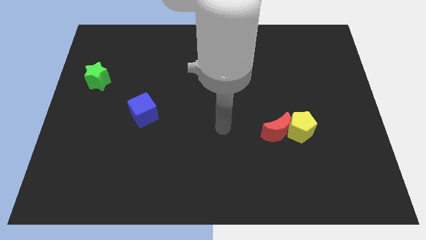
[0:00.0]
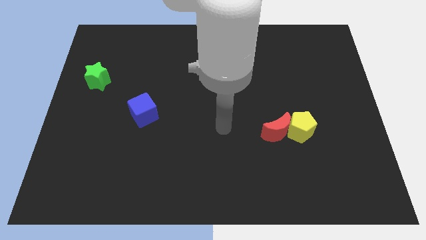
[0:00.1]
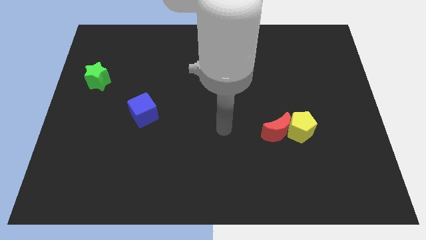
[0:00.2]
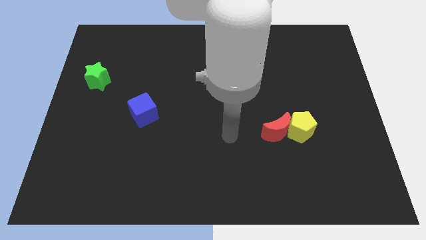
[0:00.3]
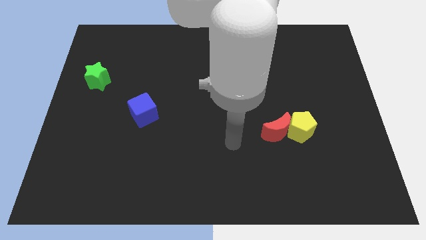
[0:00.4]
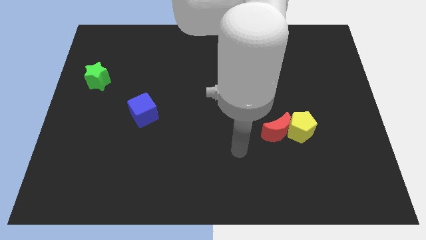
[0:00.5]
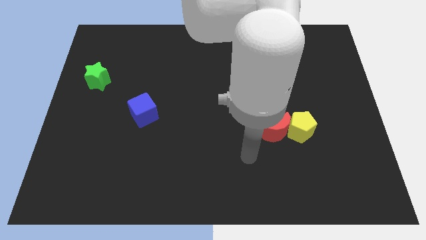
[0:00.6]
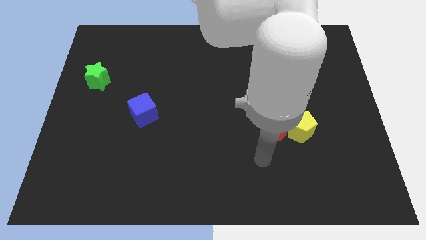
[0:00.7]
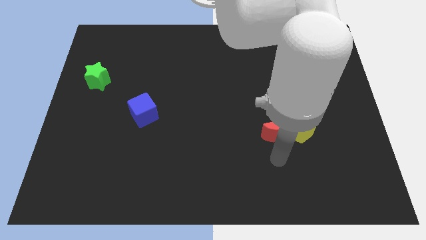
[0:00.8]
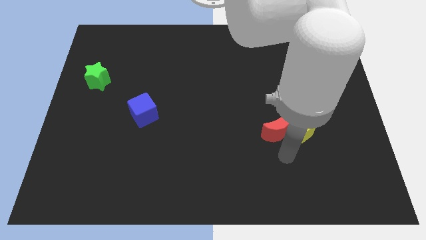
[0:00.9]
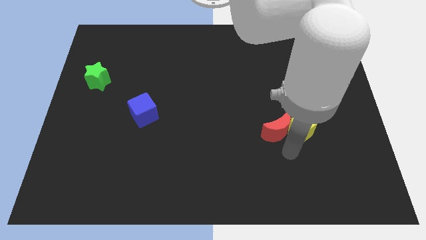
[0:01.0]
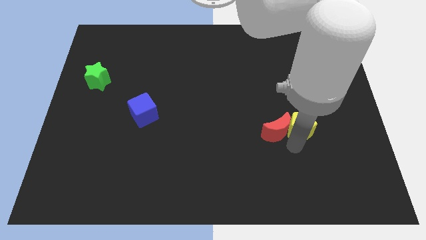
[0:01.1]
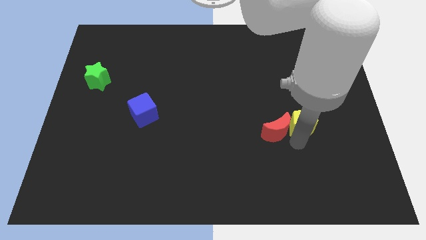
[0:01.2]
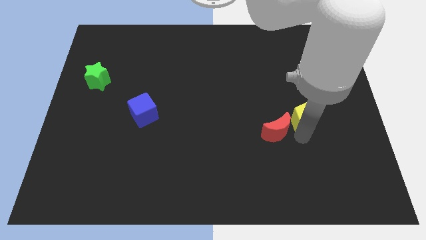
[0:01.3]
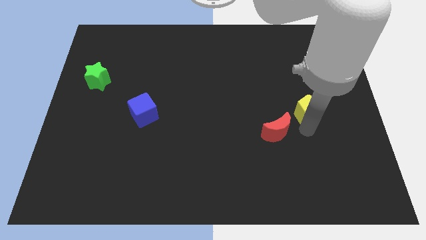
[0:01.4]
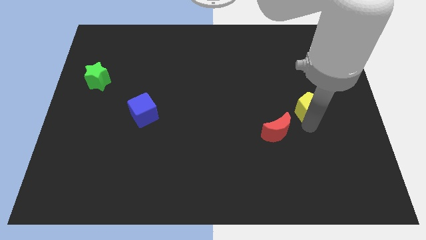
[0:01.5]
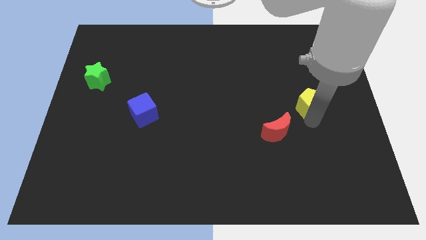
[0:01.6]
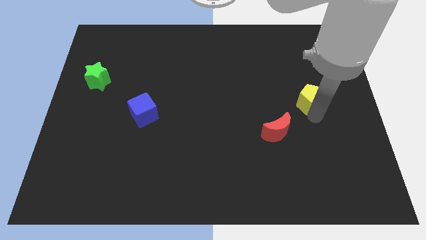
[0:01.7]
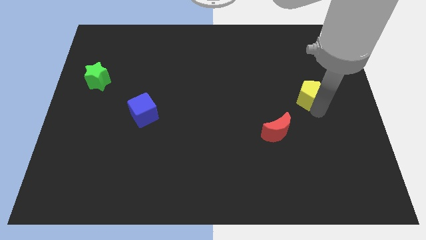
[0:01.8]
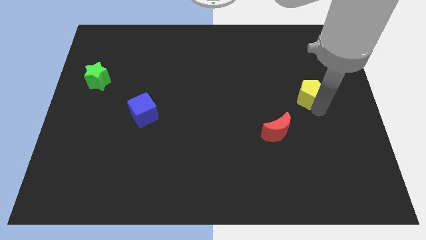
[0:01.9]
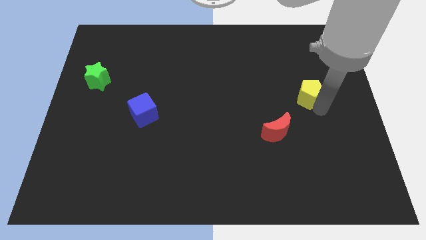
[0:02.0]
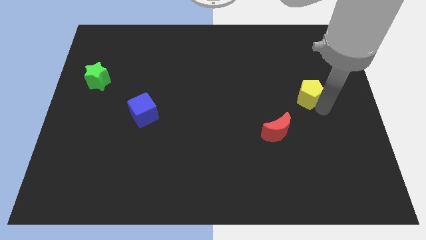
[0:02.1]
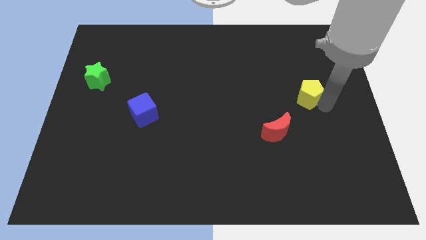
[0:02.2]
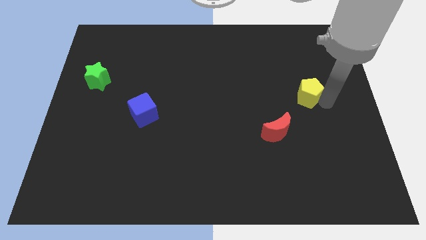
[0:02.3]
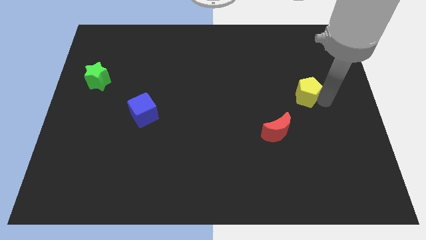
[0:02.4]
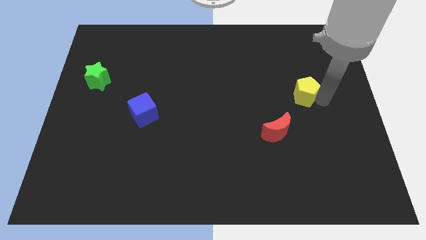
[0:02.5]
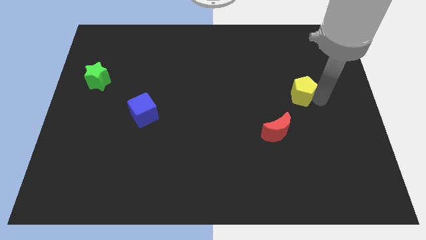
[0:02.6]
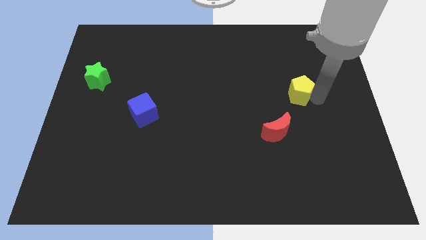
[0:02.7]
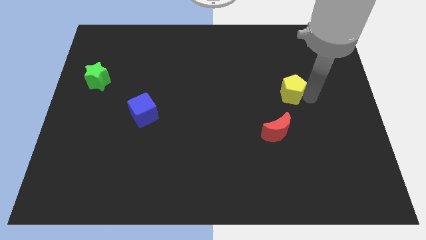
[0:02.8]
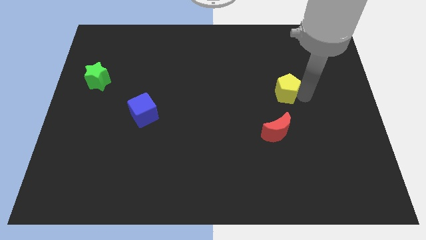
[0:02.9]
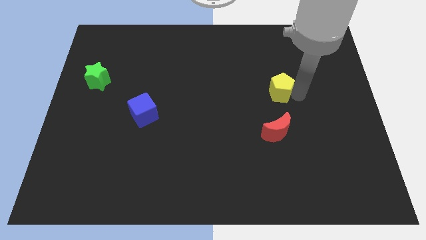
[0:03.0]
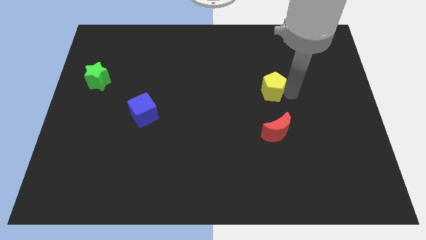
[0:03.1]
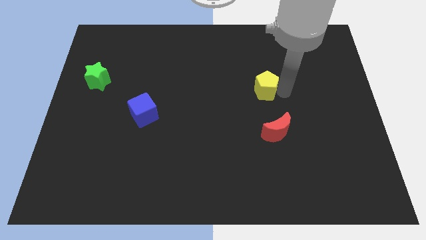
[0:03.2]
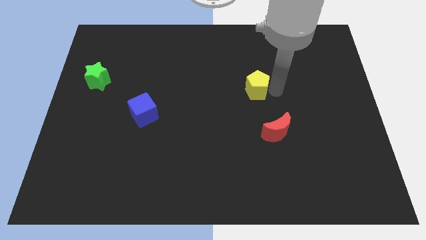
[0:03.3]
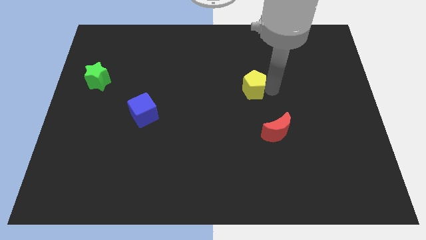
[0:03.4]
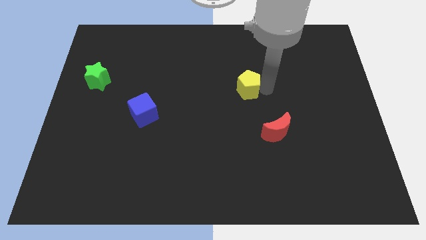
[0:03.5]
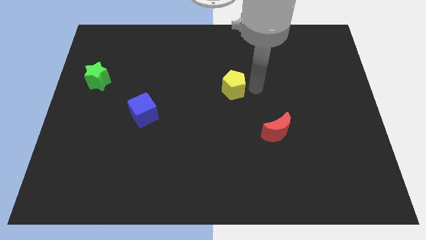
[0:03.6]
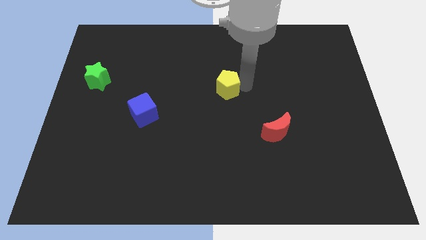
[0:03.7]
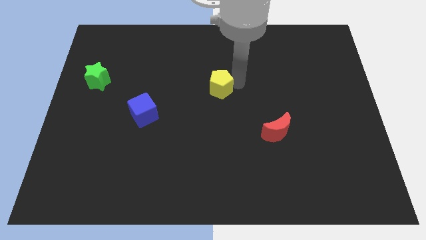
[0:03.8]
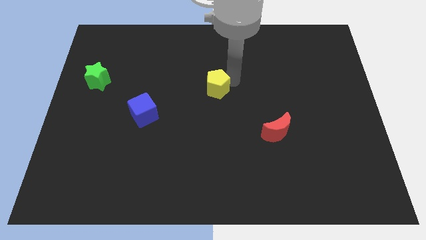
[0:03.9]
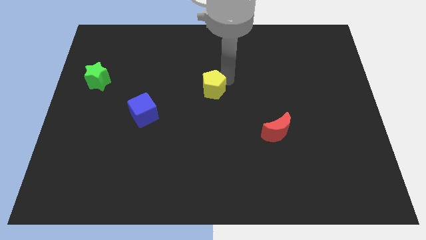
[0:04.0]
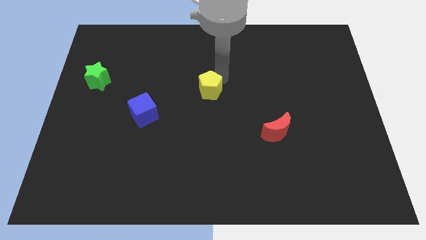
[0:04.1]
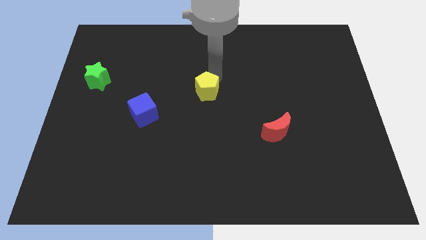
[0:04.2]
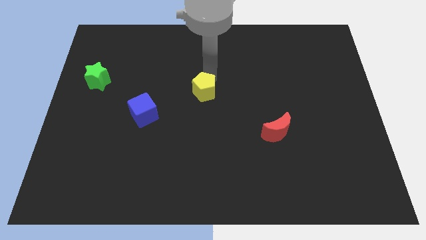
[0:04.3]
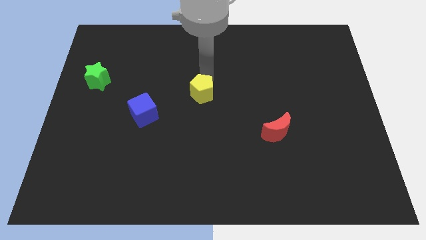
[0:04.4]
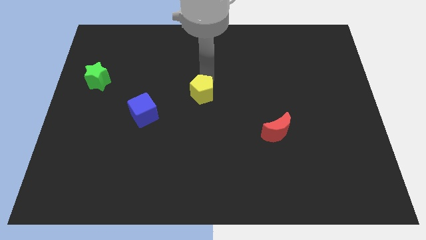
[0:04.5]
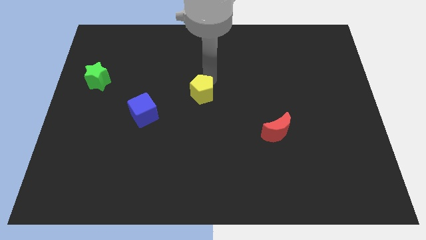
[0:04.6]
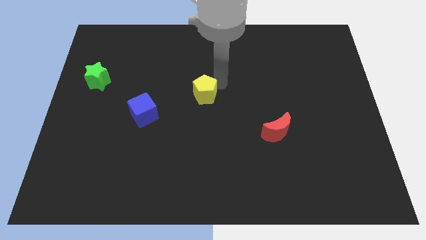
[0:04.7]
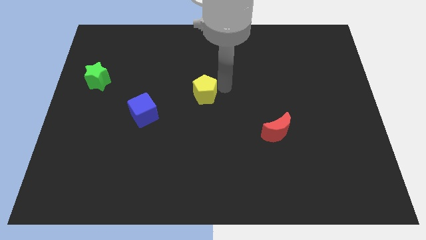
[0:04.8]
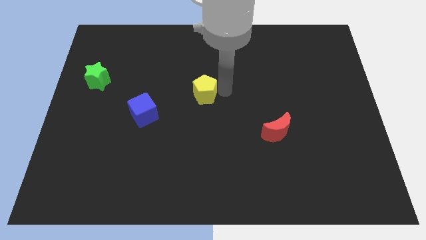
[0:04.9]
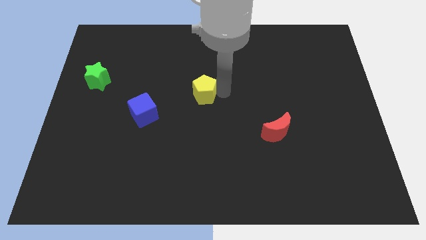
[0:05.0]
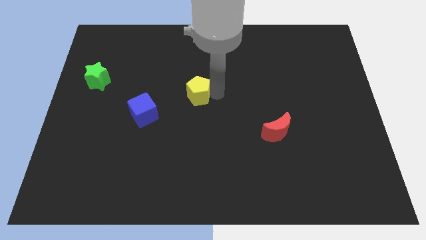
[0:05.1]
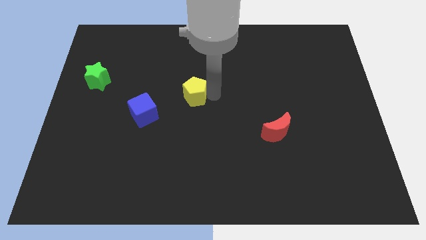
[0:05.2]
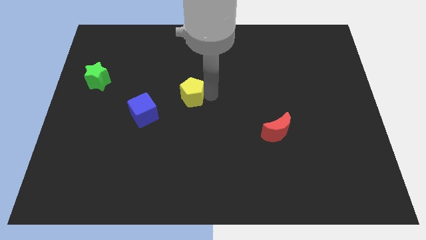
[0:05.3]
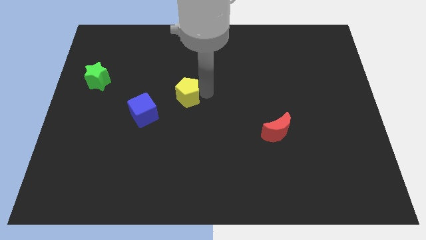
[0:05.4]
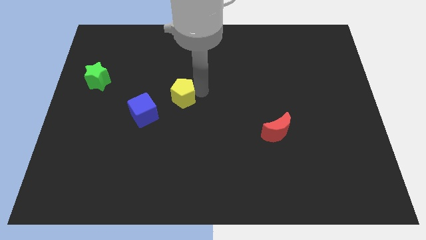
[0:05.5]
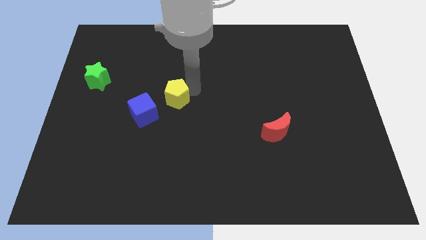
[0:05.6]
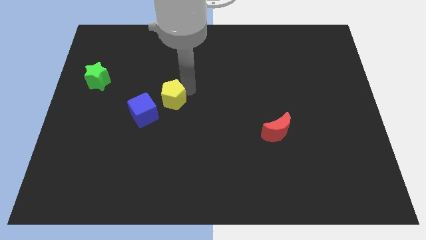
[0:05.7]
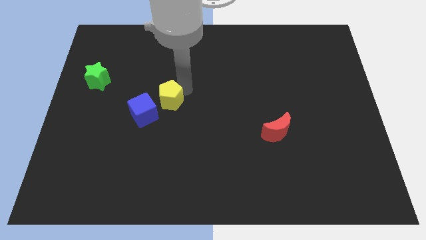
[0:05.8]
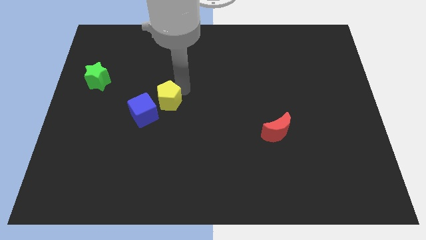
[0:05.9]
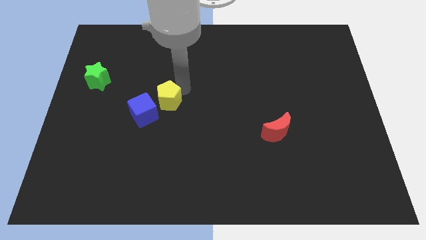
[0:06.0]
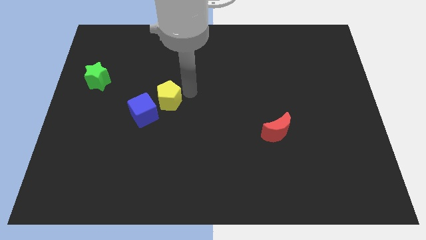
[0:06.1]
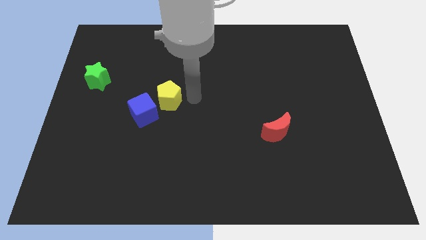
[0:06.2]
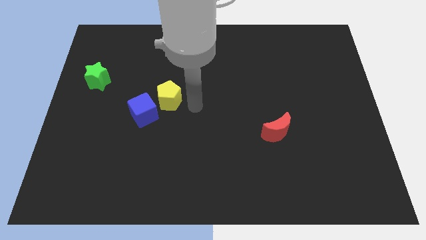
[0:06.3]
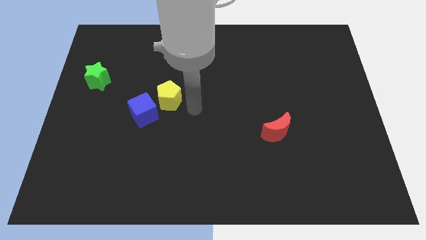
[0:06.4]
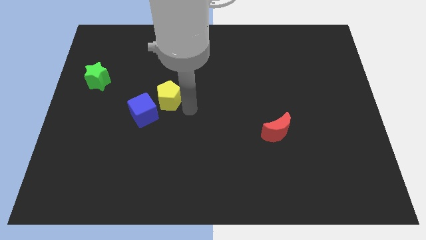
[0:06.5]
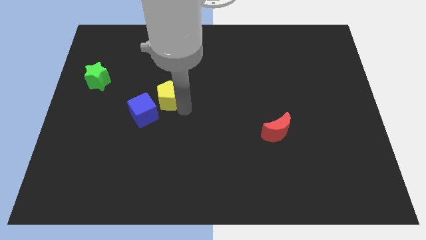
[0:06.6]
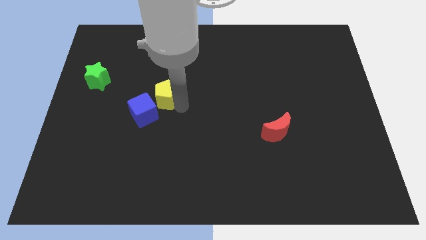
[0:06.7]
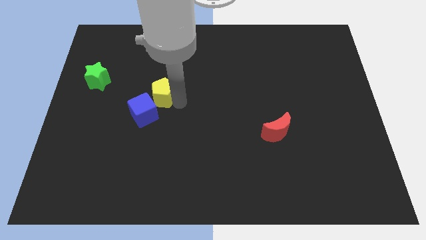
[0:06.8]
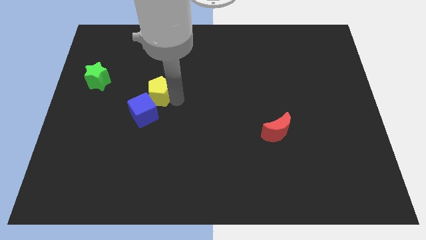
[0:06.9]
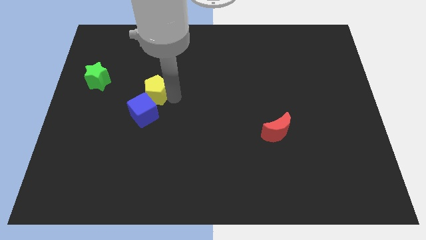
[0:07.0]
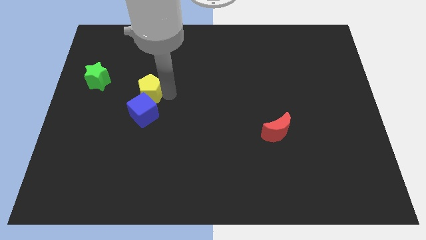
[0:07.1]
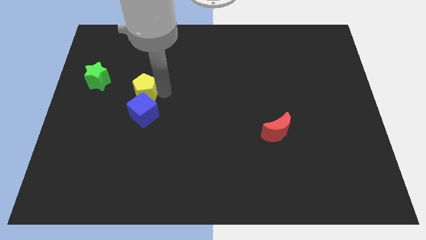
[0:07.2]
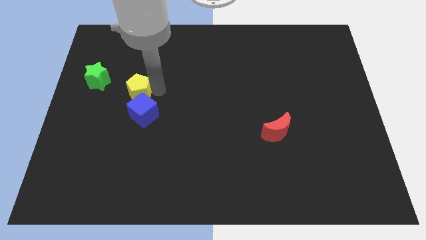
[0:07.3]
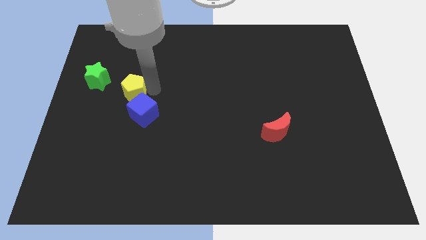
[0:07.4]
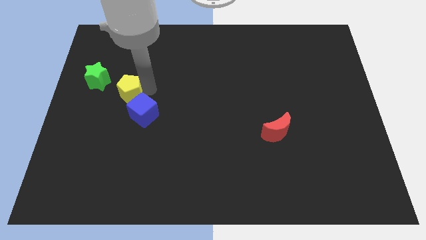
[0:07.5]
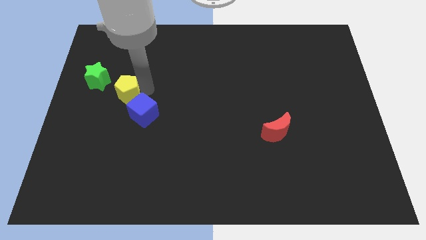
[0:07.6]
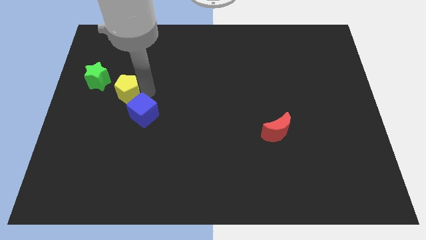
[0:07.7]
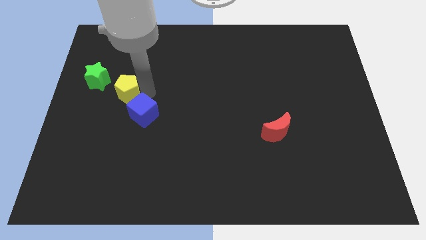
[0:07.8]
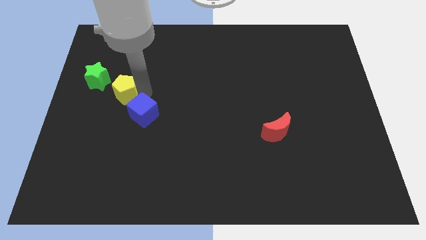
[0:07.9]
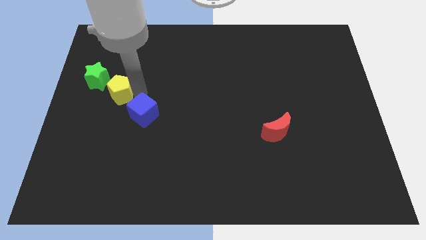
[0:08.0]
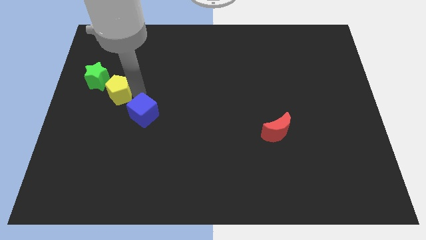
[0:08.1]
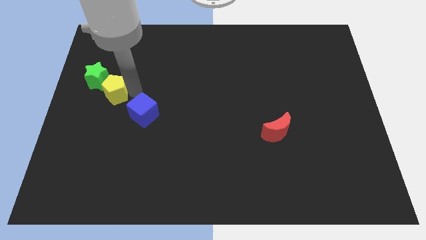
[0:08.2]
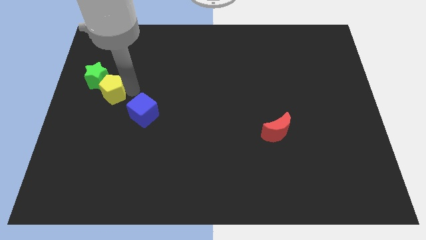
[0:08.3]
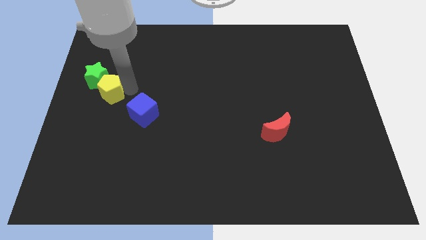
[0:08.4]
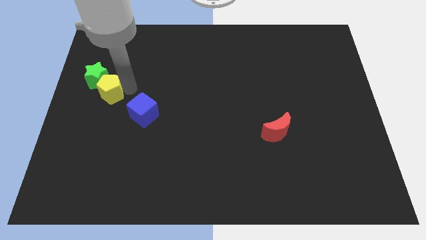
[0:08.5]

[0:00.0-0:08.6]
put the yellow pentagon next to the green star

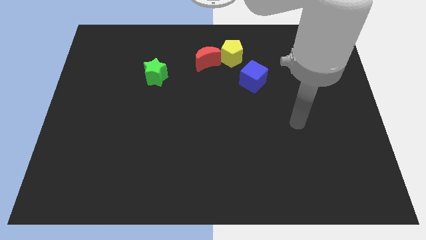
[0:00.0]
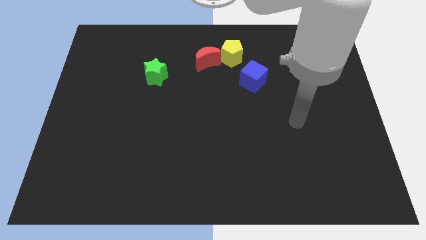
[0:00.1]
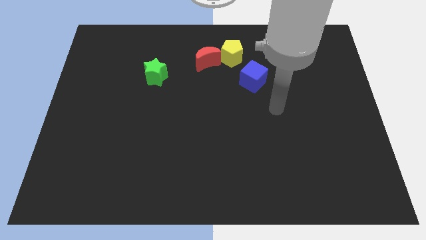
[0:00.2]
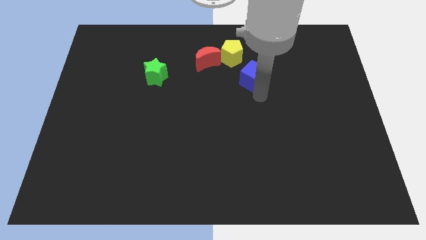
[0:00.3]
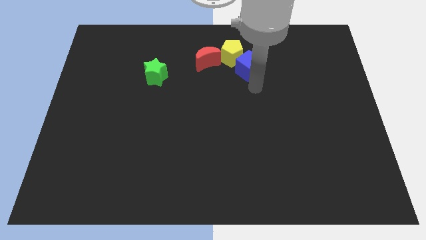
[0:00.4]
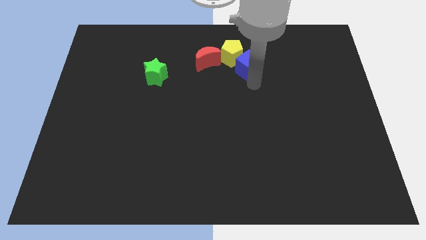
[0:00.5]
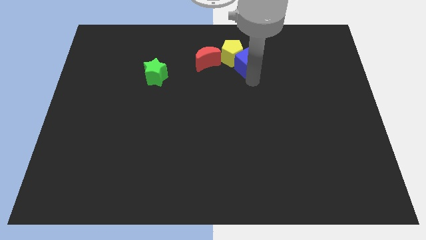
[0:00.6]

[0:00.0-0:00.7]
slide the blue cube to the pentagon
